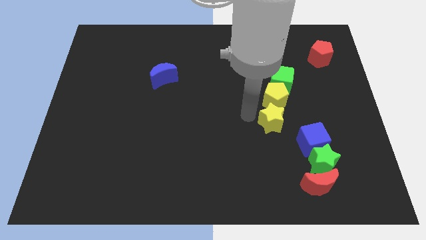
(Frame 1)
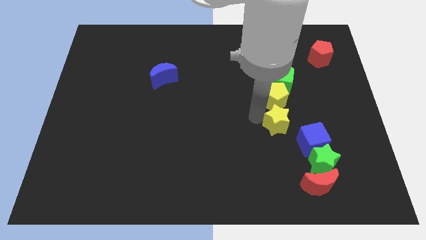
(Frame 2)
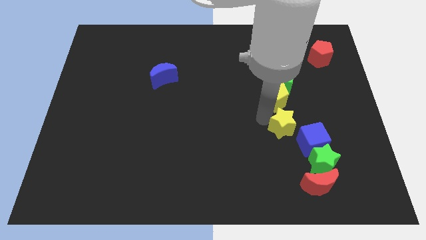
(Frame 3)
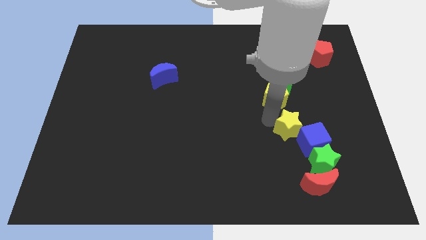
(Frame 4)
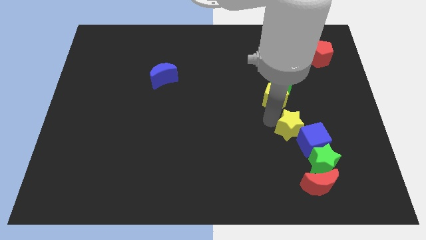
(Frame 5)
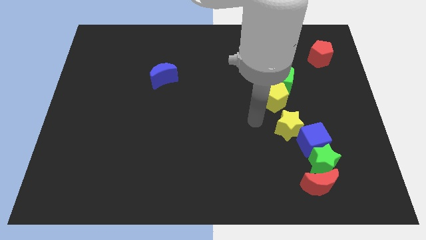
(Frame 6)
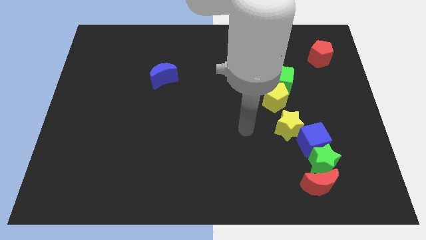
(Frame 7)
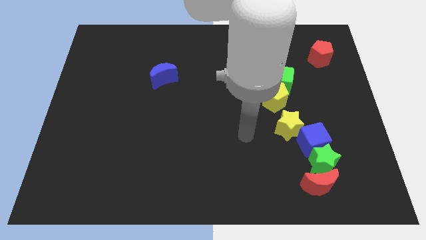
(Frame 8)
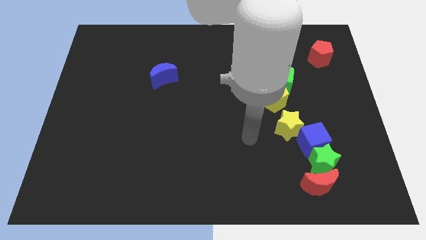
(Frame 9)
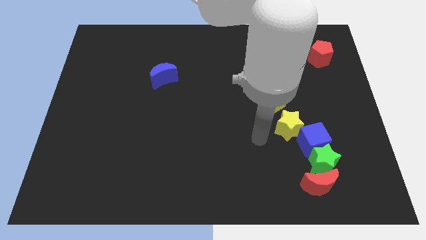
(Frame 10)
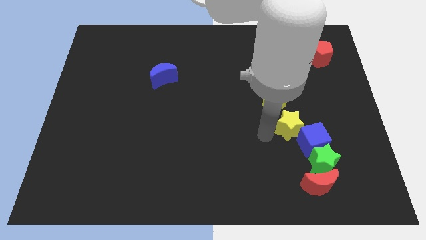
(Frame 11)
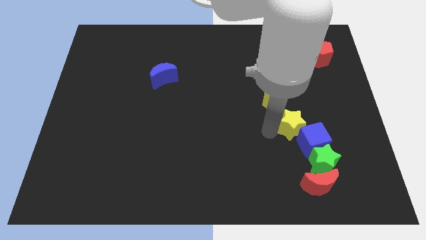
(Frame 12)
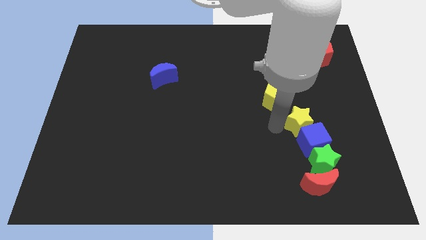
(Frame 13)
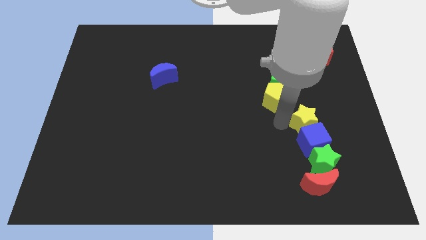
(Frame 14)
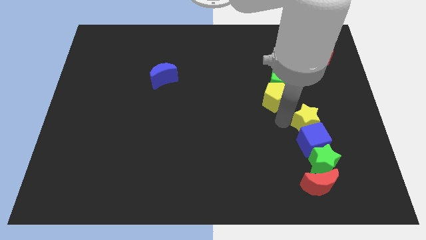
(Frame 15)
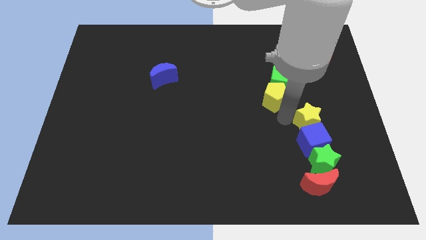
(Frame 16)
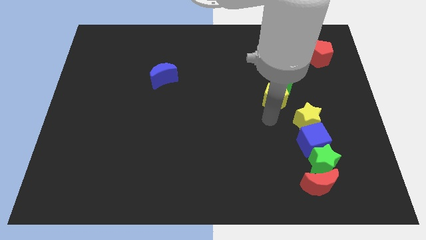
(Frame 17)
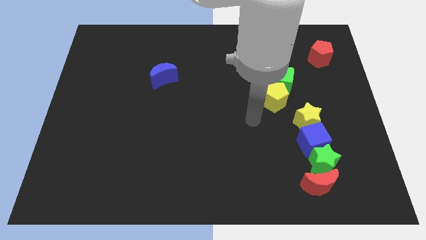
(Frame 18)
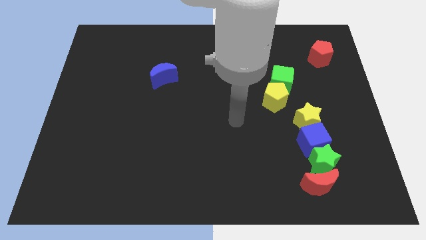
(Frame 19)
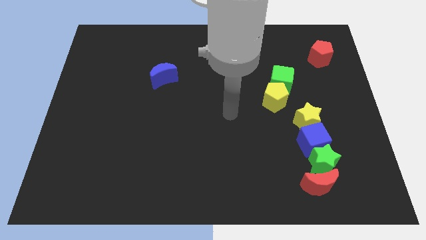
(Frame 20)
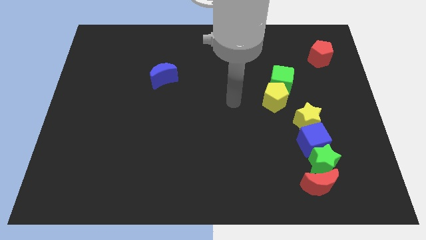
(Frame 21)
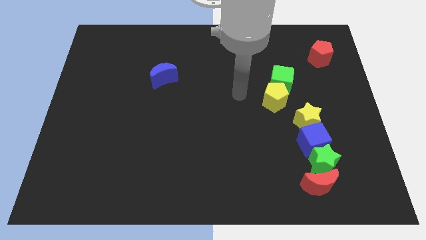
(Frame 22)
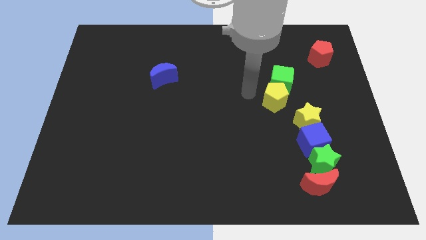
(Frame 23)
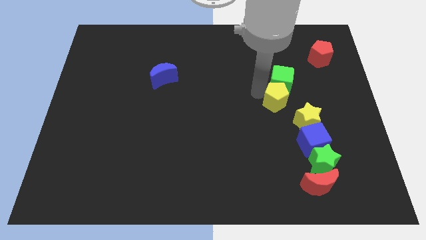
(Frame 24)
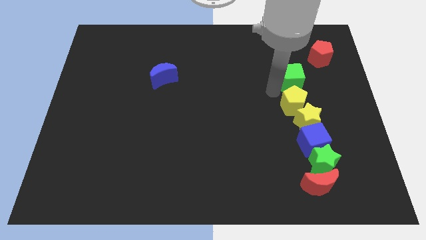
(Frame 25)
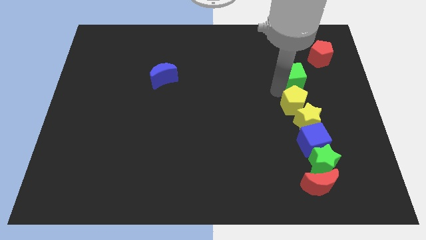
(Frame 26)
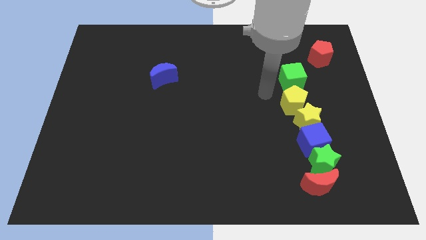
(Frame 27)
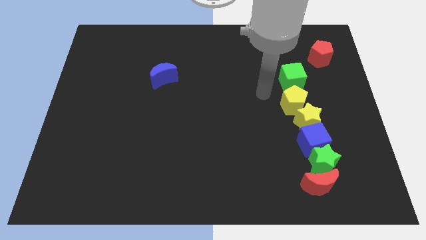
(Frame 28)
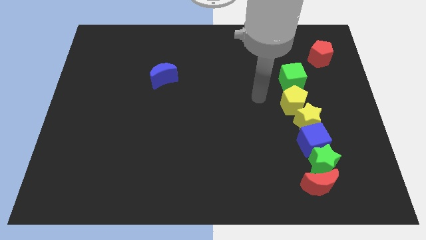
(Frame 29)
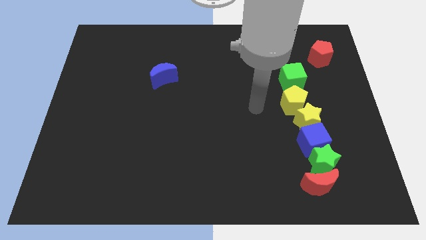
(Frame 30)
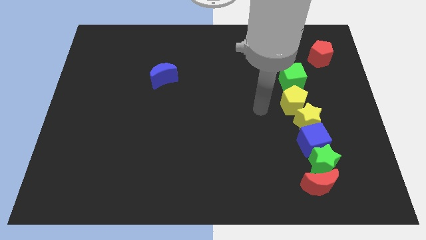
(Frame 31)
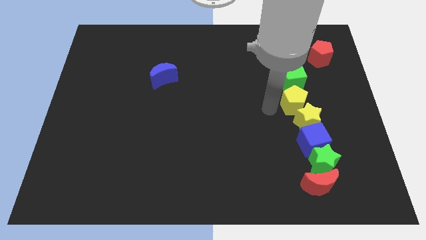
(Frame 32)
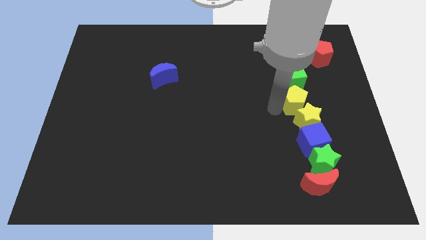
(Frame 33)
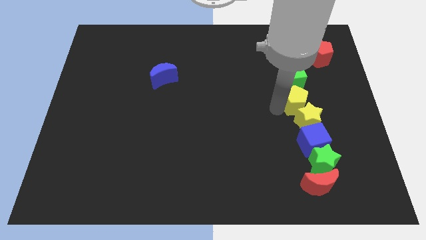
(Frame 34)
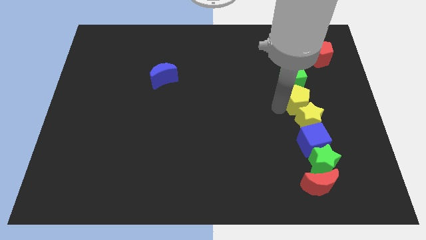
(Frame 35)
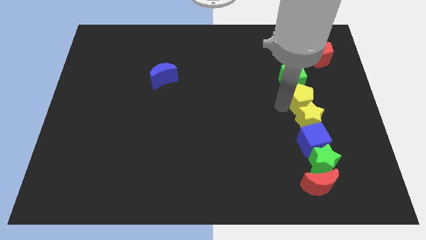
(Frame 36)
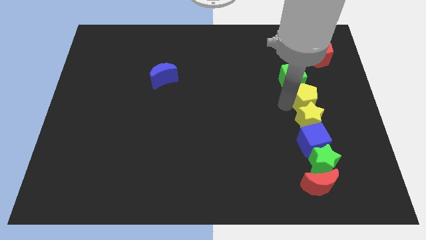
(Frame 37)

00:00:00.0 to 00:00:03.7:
arrange the group of blocks in a line properly

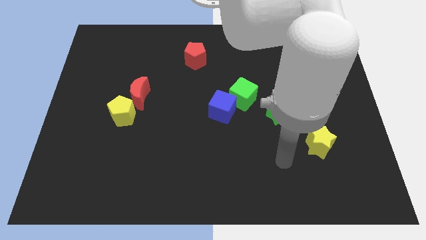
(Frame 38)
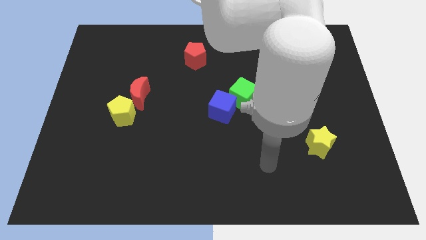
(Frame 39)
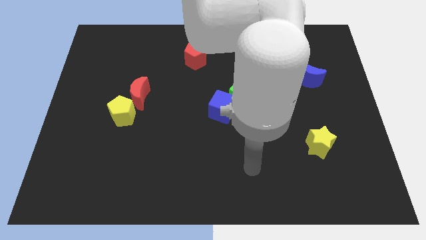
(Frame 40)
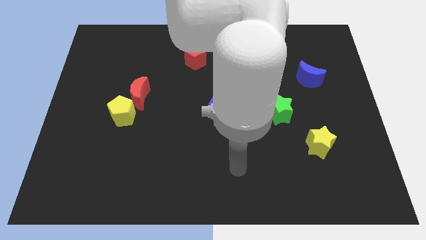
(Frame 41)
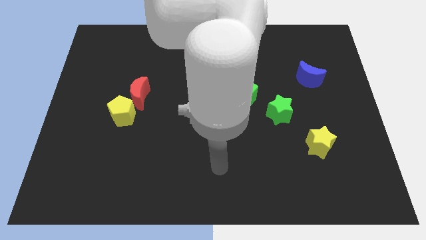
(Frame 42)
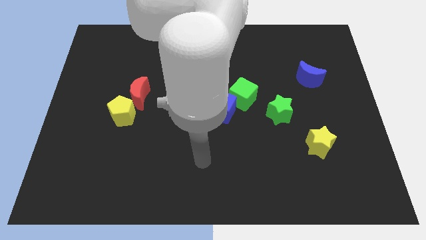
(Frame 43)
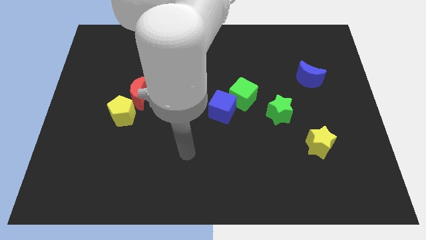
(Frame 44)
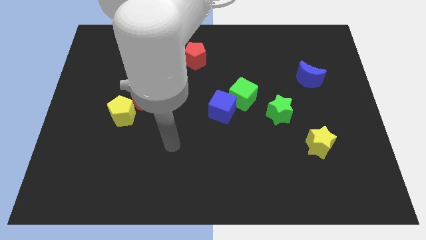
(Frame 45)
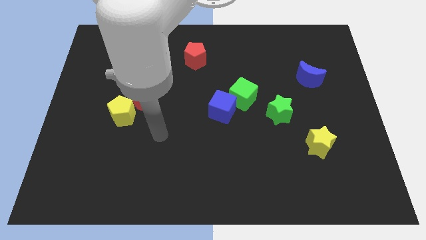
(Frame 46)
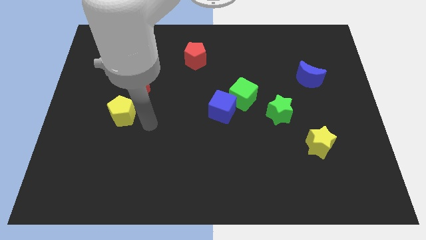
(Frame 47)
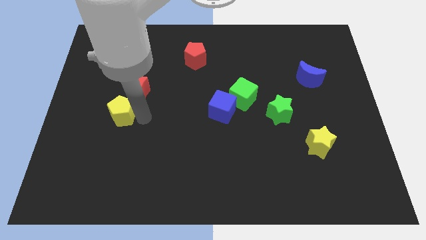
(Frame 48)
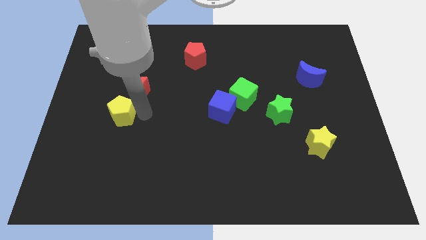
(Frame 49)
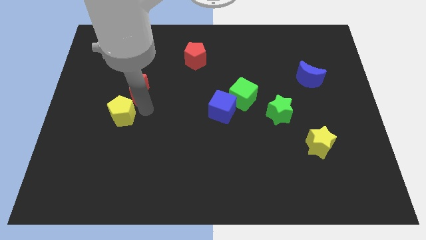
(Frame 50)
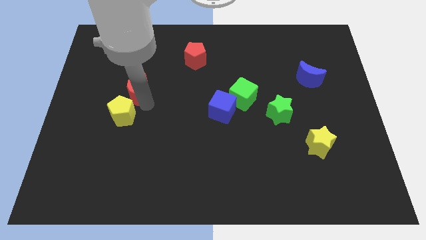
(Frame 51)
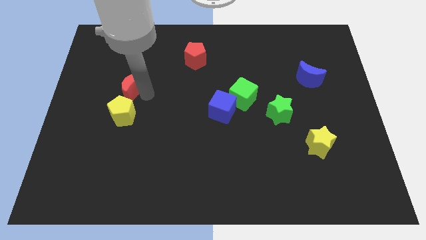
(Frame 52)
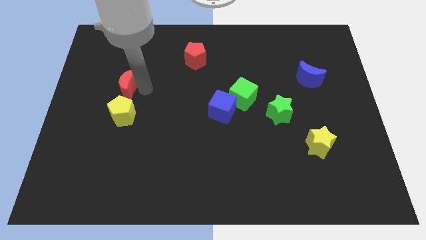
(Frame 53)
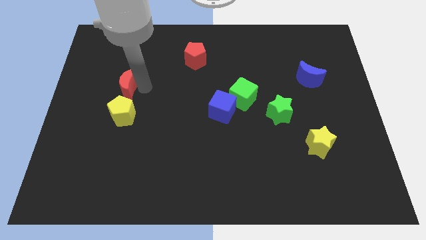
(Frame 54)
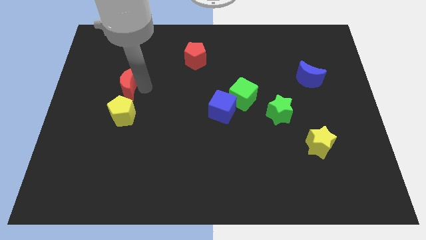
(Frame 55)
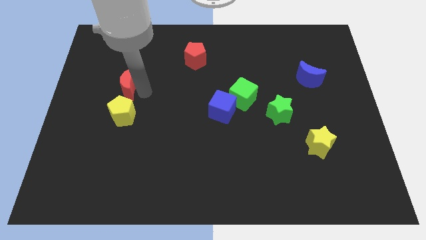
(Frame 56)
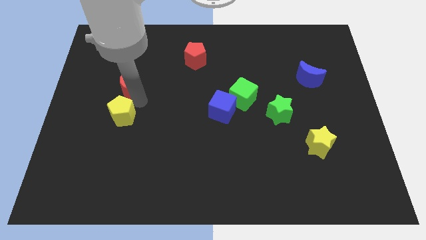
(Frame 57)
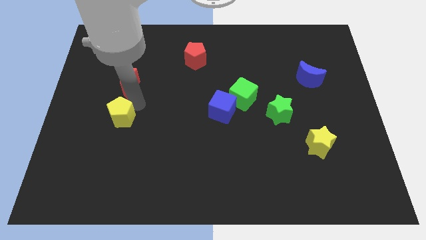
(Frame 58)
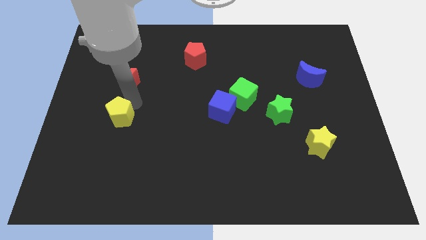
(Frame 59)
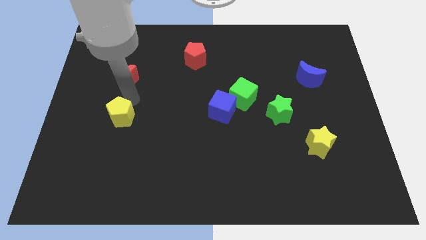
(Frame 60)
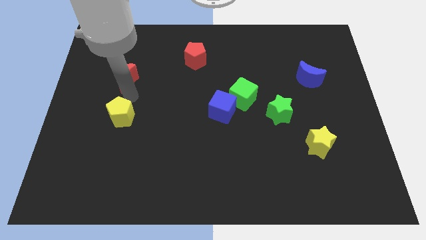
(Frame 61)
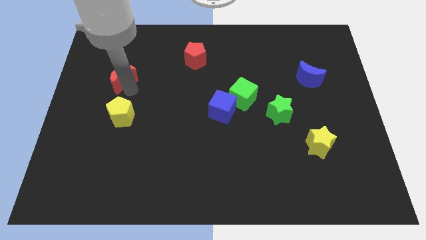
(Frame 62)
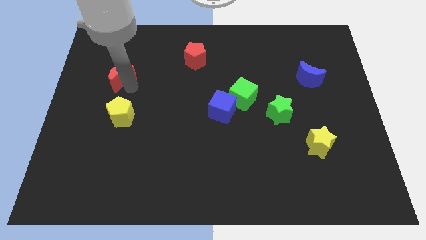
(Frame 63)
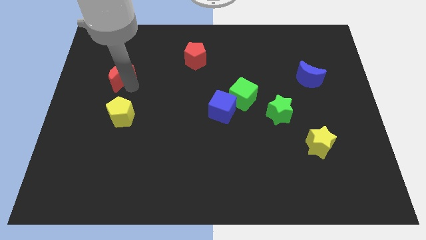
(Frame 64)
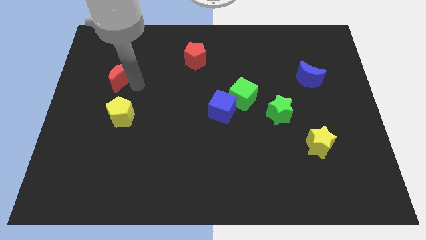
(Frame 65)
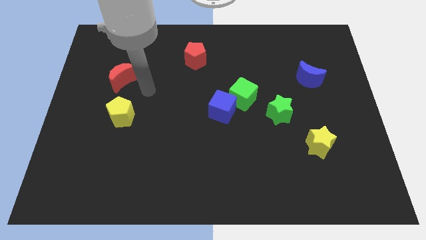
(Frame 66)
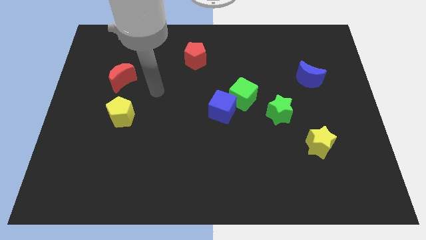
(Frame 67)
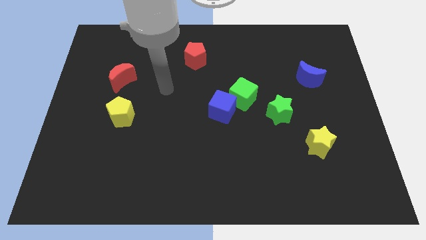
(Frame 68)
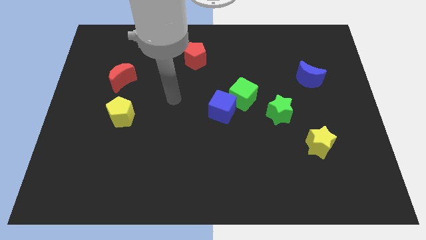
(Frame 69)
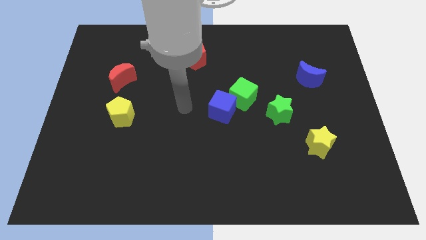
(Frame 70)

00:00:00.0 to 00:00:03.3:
move the red moon on top of yellow pentagon

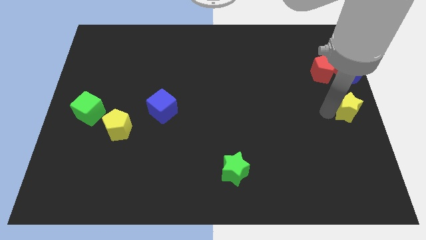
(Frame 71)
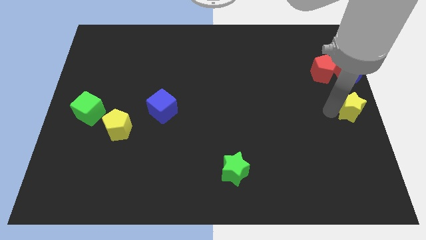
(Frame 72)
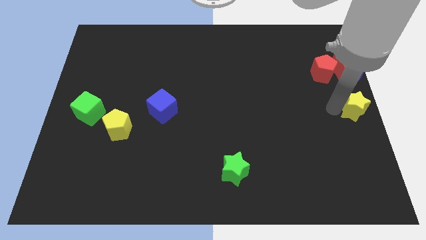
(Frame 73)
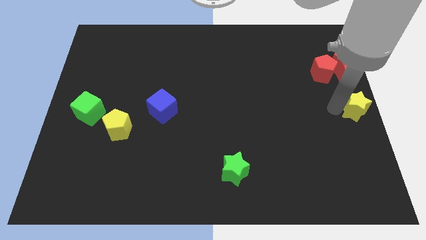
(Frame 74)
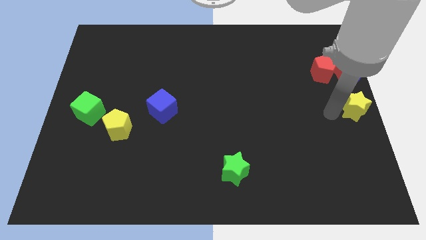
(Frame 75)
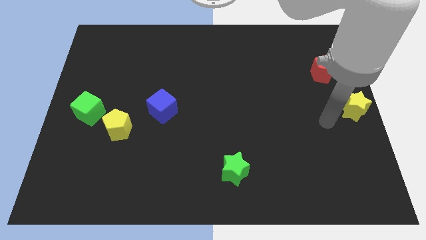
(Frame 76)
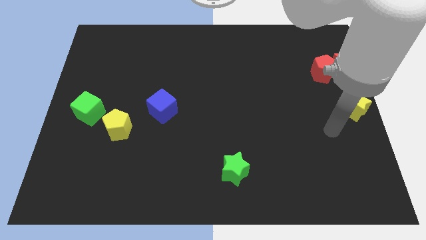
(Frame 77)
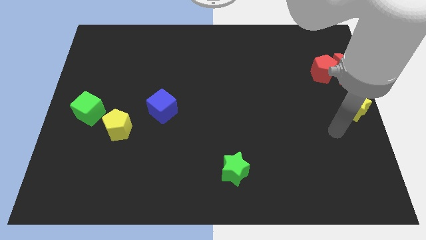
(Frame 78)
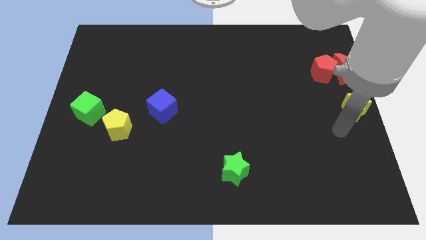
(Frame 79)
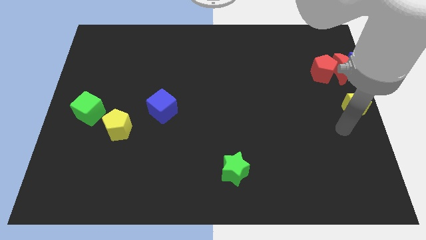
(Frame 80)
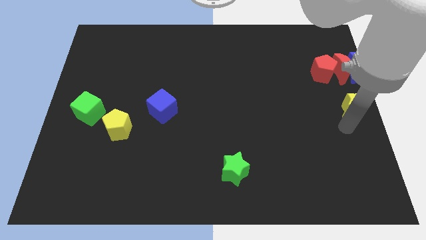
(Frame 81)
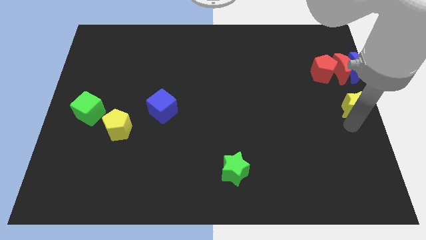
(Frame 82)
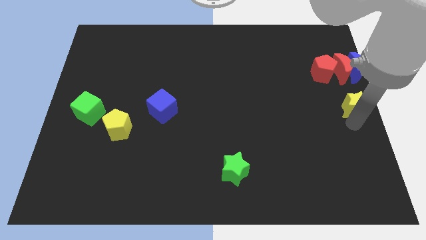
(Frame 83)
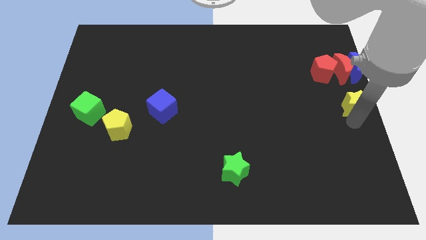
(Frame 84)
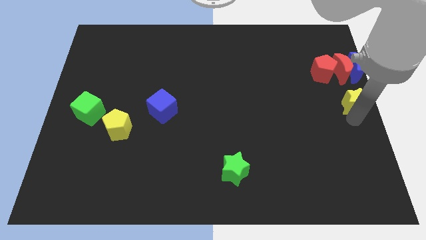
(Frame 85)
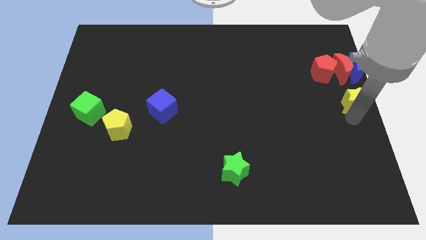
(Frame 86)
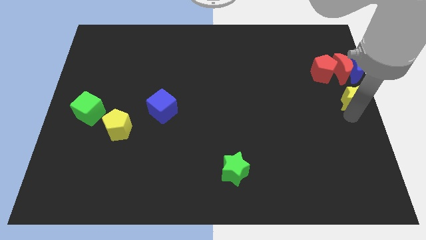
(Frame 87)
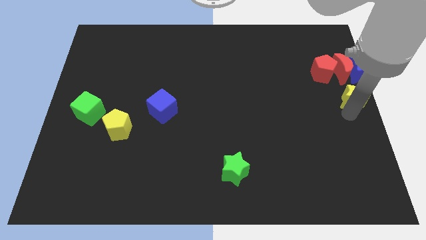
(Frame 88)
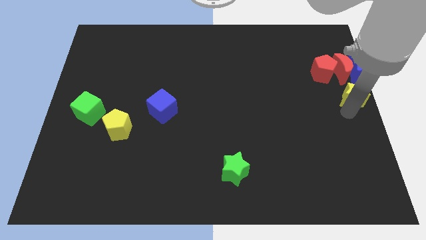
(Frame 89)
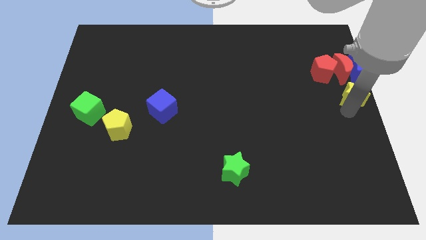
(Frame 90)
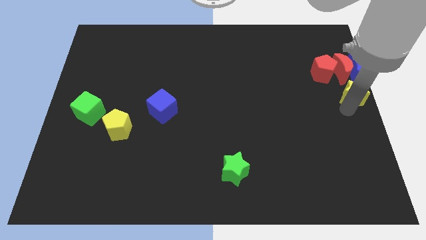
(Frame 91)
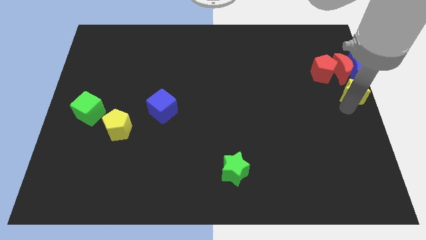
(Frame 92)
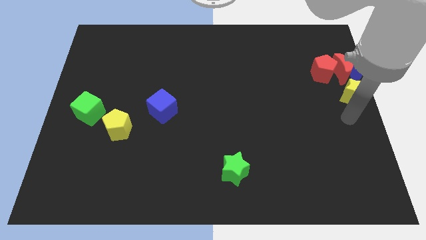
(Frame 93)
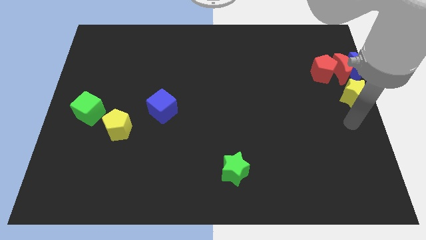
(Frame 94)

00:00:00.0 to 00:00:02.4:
place yellow star below the blue crescent
